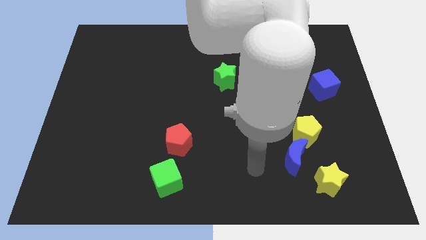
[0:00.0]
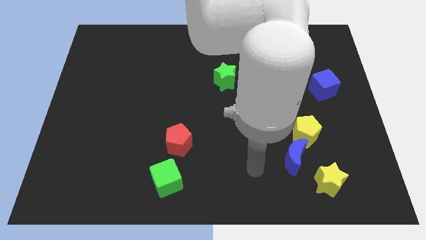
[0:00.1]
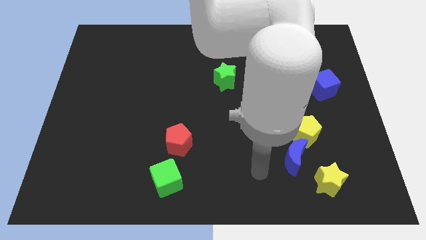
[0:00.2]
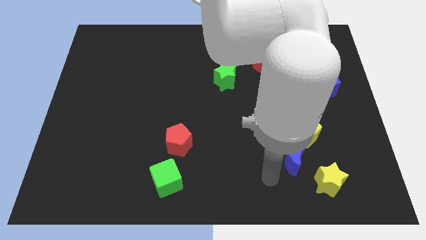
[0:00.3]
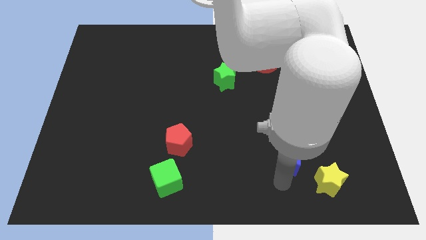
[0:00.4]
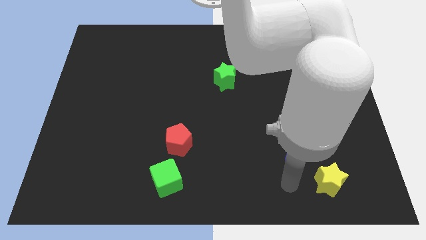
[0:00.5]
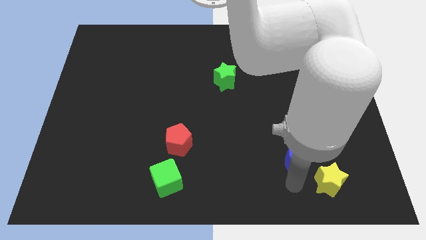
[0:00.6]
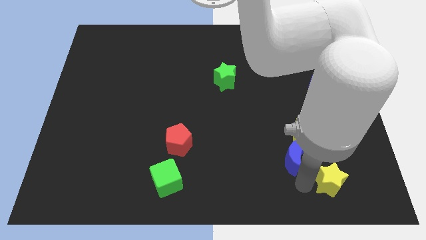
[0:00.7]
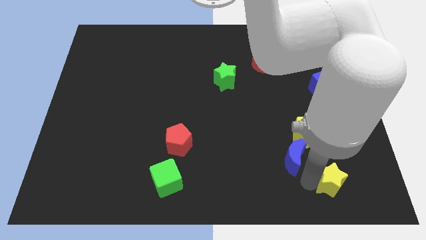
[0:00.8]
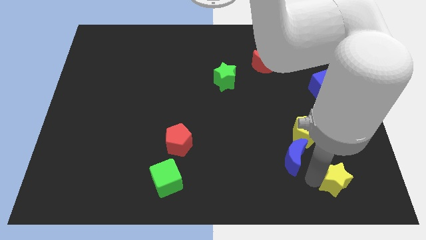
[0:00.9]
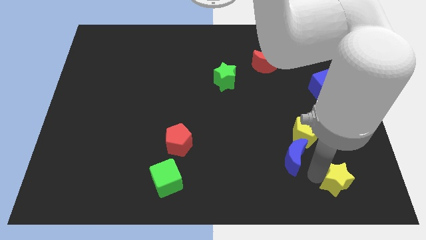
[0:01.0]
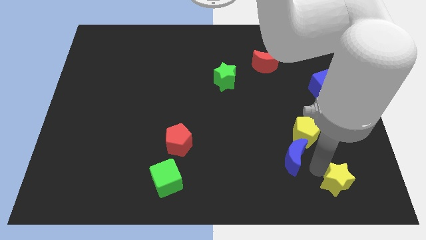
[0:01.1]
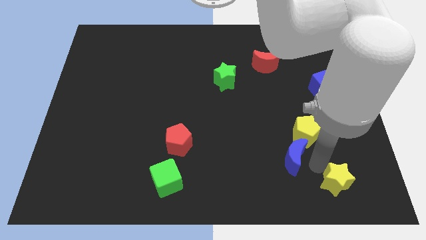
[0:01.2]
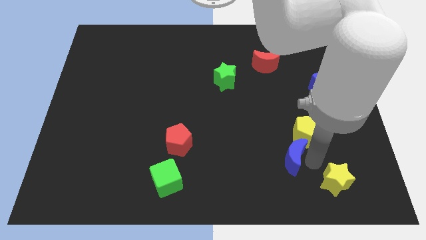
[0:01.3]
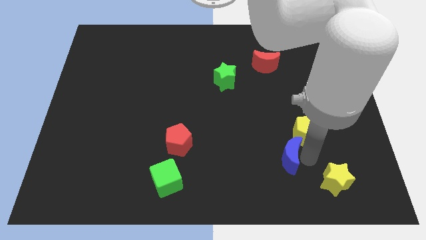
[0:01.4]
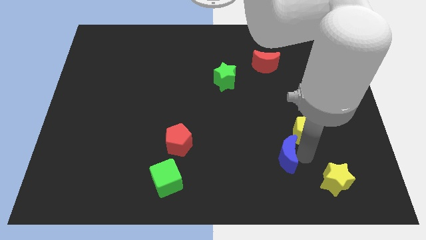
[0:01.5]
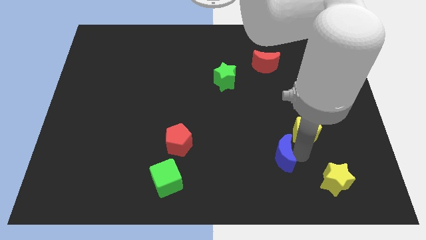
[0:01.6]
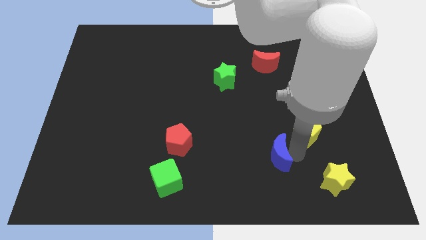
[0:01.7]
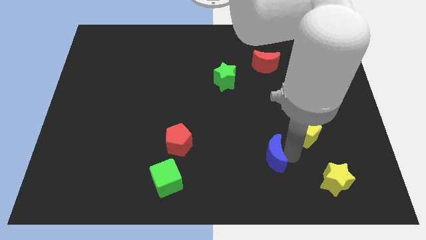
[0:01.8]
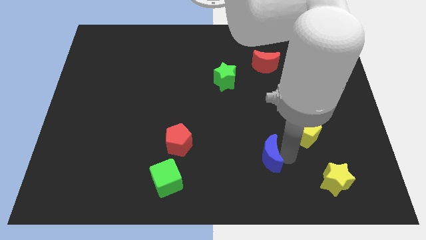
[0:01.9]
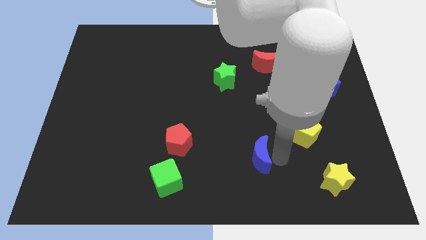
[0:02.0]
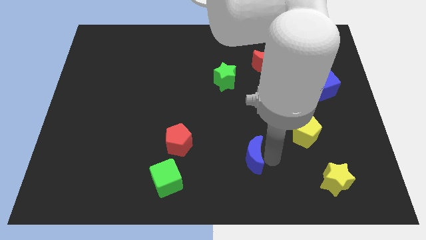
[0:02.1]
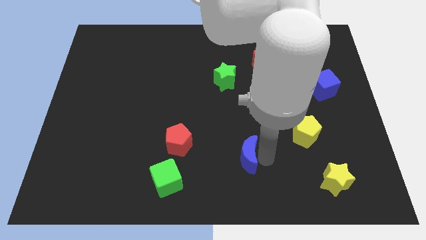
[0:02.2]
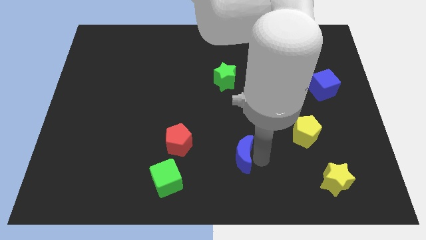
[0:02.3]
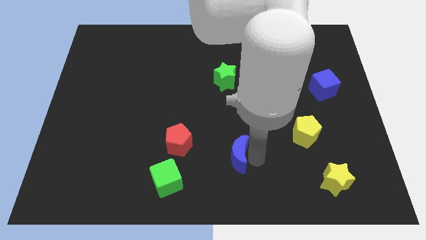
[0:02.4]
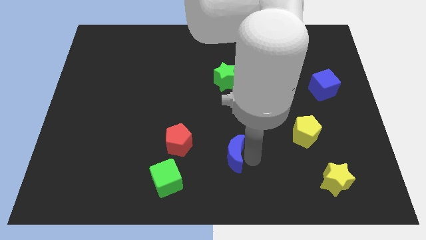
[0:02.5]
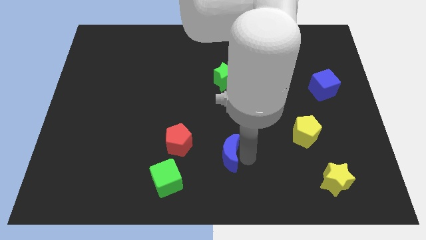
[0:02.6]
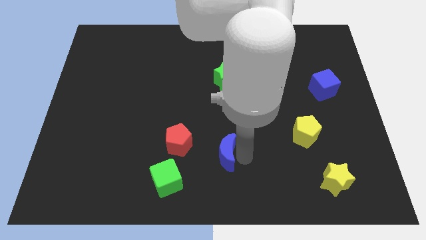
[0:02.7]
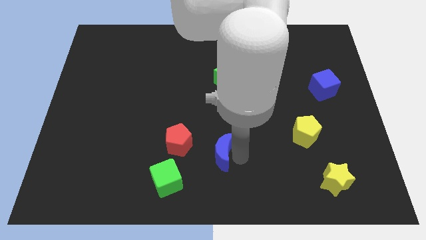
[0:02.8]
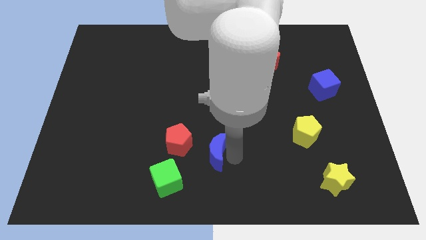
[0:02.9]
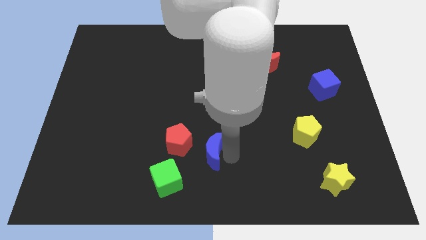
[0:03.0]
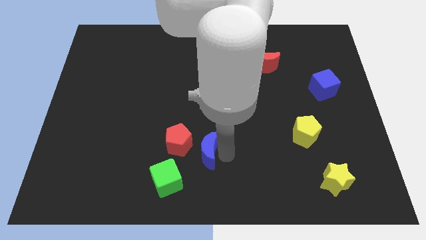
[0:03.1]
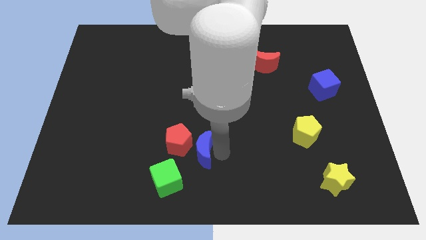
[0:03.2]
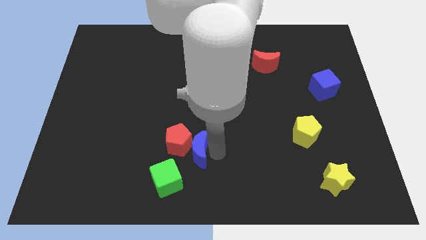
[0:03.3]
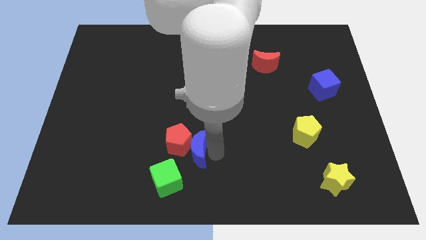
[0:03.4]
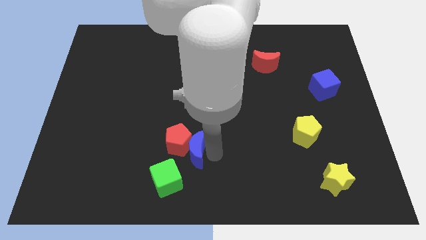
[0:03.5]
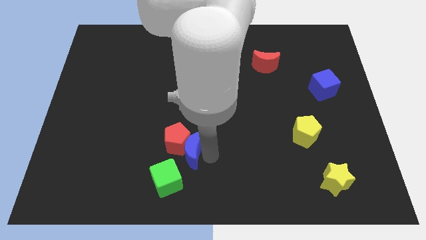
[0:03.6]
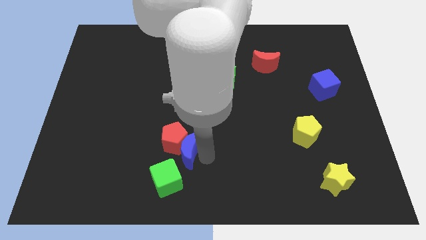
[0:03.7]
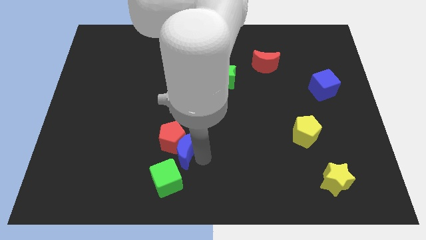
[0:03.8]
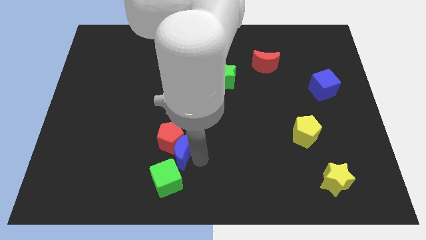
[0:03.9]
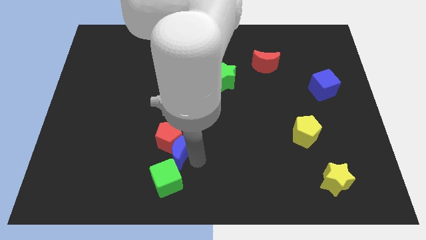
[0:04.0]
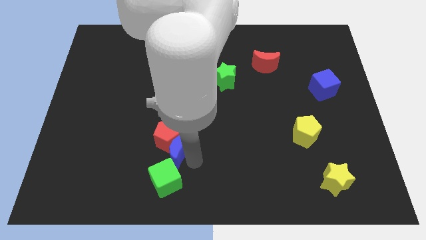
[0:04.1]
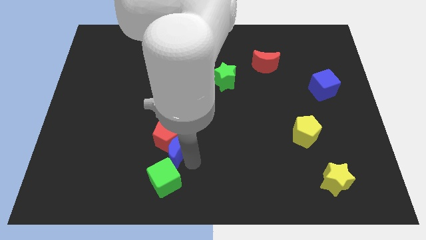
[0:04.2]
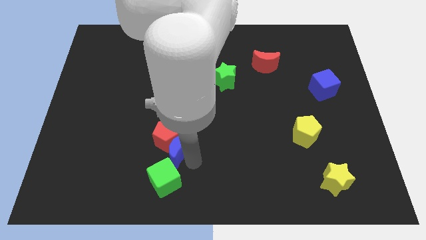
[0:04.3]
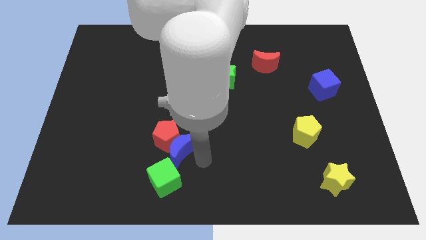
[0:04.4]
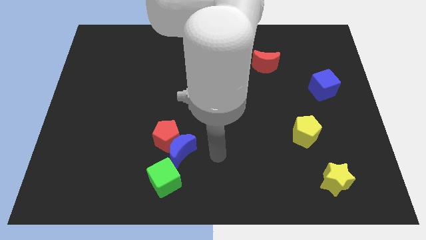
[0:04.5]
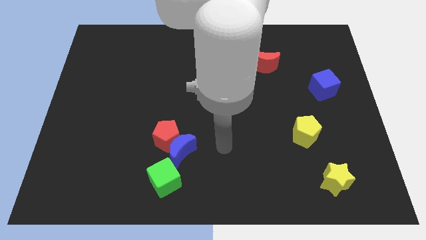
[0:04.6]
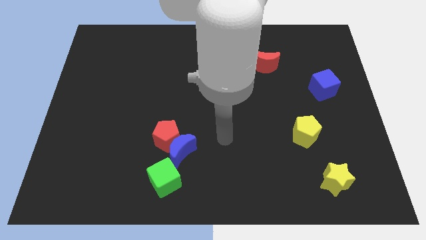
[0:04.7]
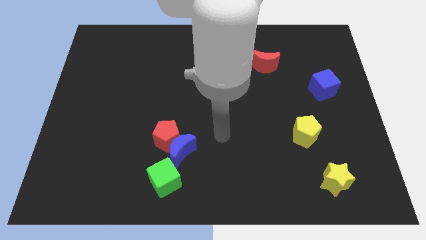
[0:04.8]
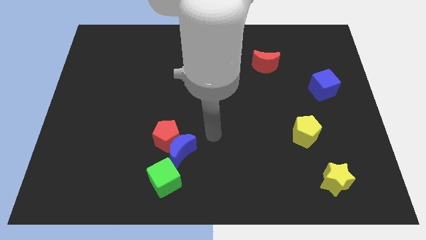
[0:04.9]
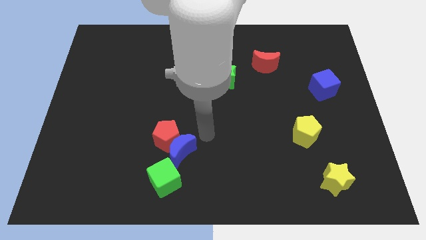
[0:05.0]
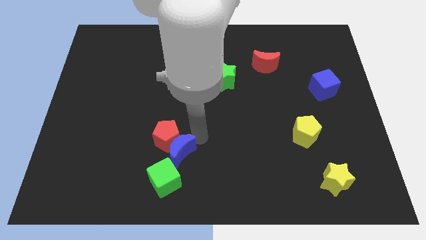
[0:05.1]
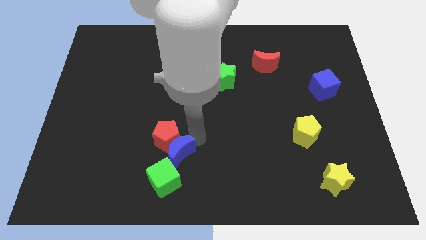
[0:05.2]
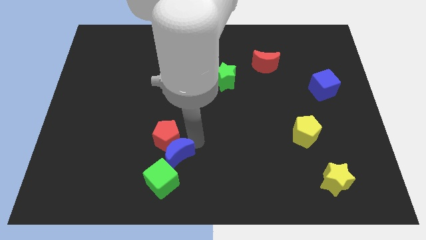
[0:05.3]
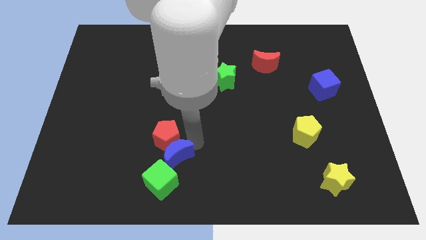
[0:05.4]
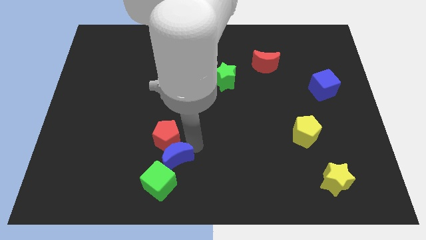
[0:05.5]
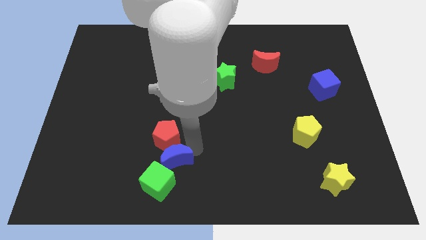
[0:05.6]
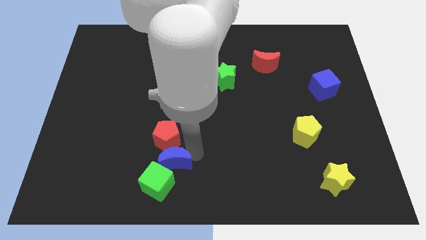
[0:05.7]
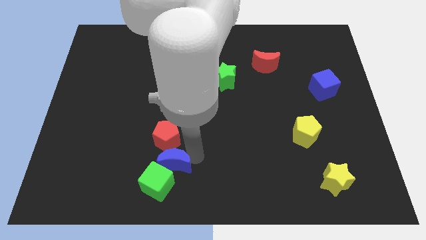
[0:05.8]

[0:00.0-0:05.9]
push the blue moon next to the green cube

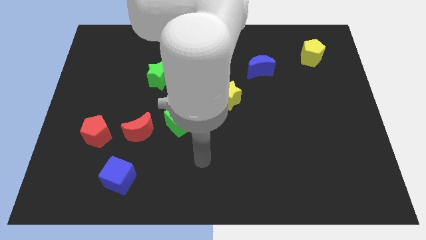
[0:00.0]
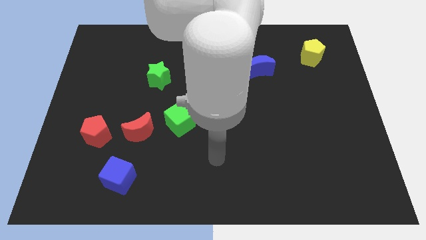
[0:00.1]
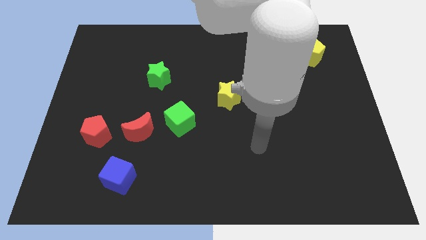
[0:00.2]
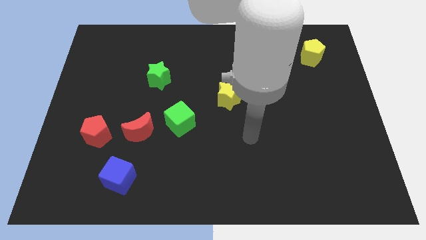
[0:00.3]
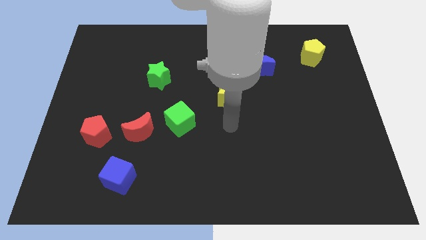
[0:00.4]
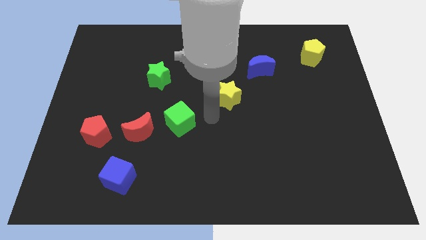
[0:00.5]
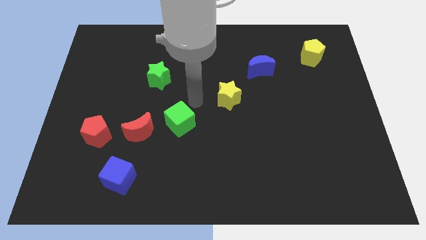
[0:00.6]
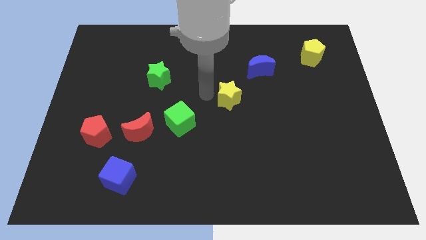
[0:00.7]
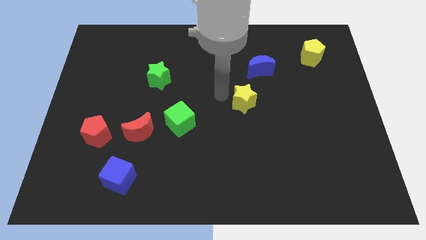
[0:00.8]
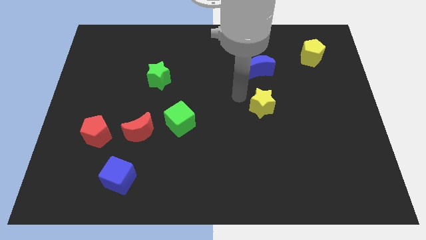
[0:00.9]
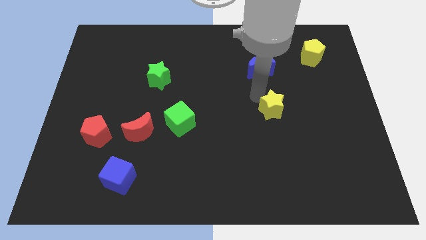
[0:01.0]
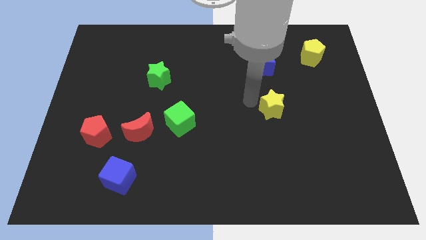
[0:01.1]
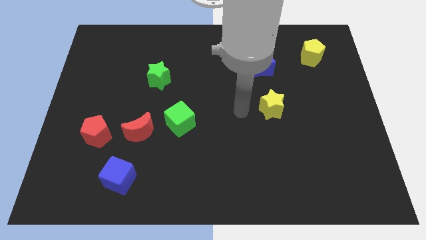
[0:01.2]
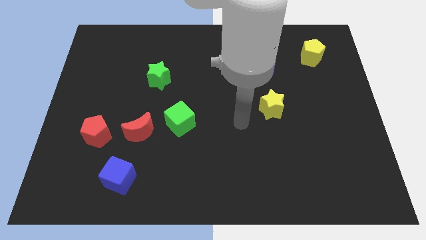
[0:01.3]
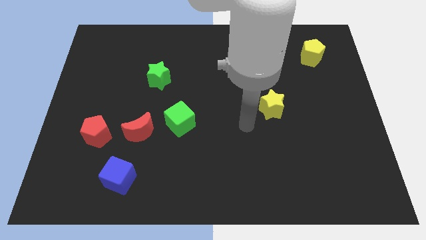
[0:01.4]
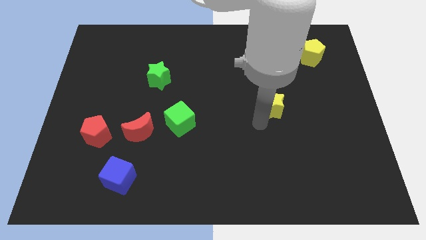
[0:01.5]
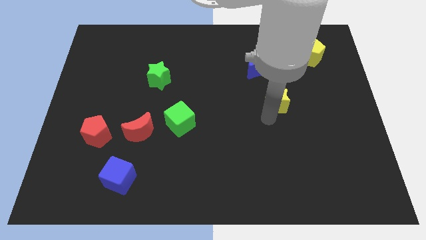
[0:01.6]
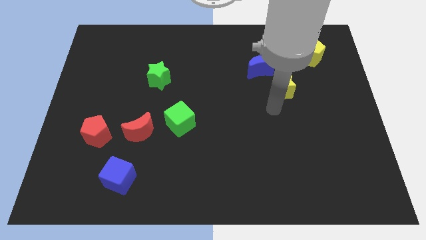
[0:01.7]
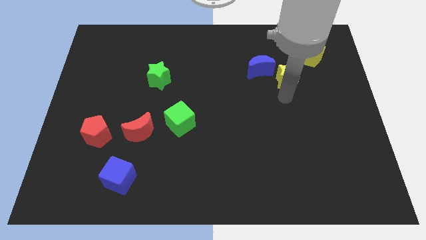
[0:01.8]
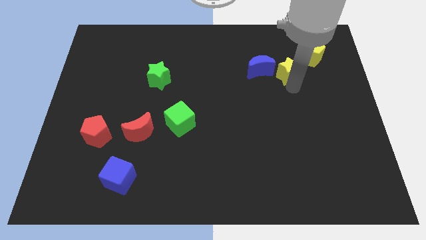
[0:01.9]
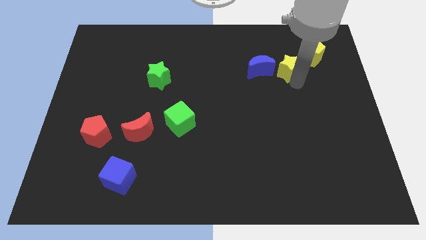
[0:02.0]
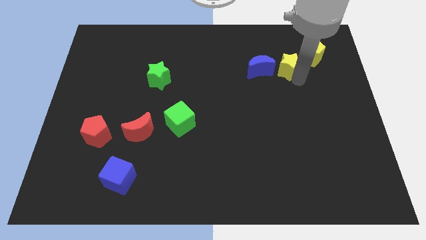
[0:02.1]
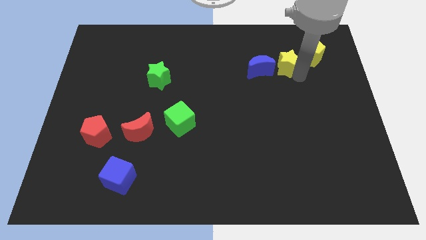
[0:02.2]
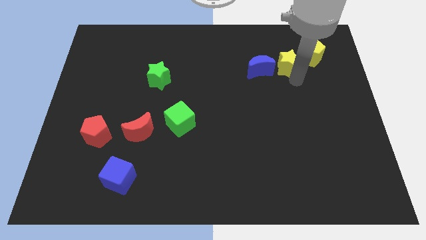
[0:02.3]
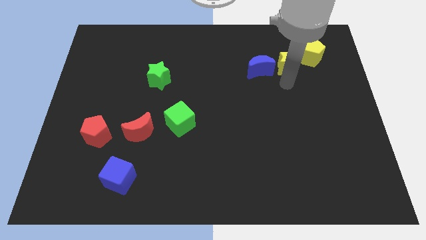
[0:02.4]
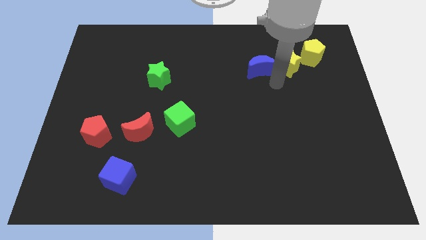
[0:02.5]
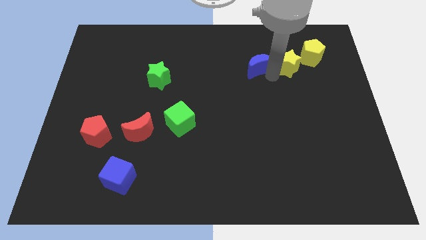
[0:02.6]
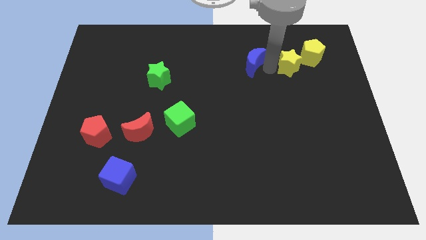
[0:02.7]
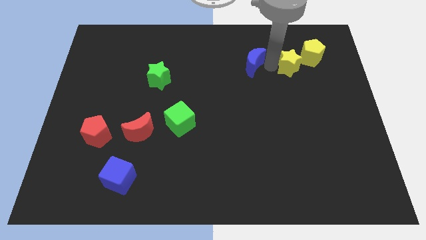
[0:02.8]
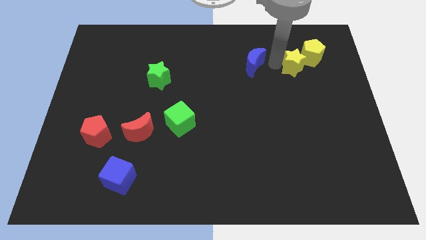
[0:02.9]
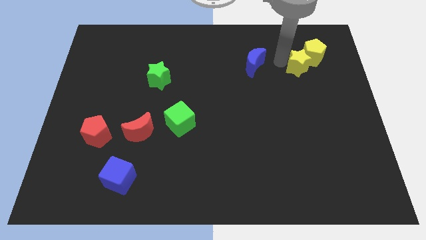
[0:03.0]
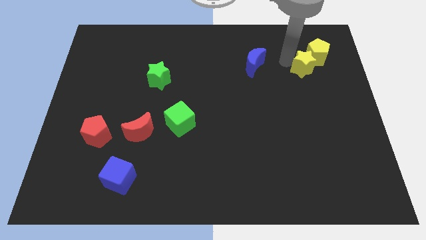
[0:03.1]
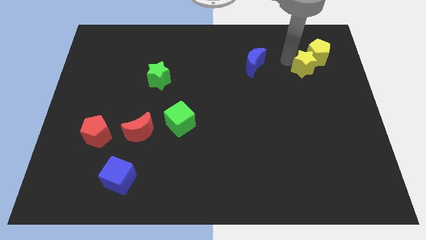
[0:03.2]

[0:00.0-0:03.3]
slide the yellow star to the yellow pentagon
